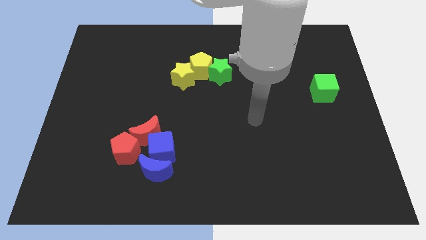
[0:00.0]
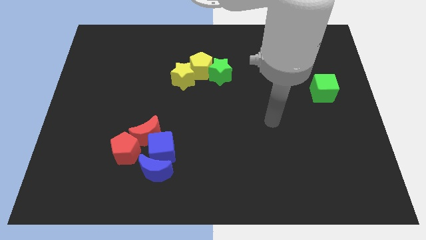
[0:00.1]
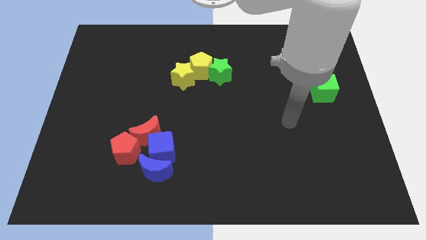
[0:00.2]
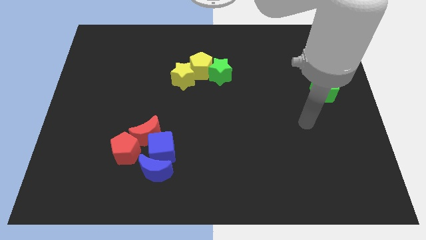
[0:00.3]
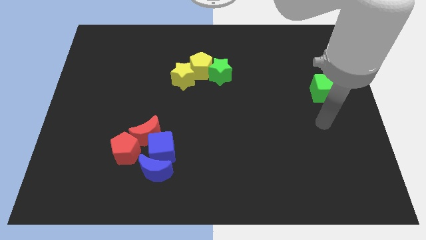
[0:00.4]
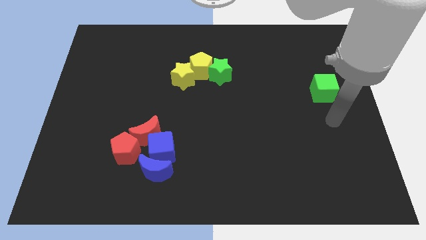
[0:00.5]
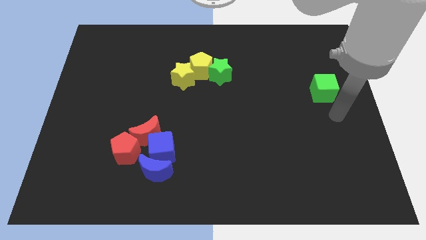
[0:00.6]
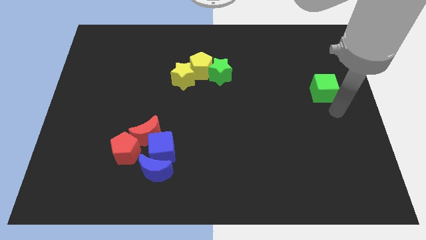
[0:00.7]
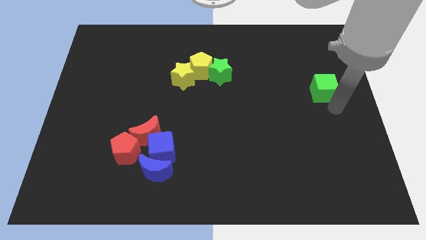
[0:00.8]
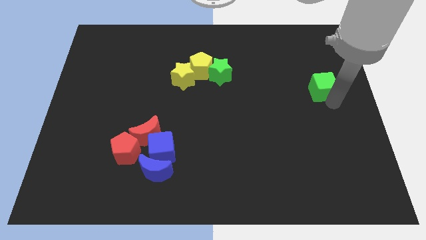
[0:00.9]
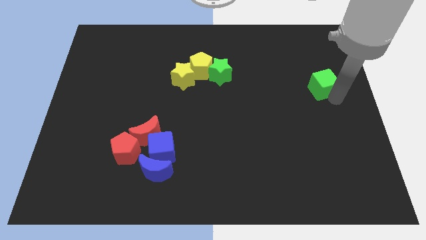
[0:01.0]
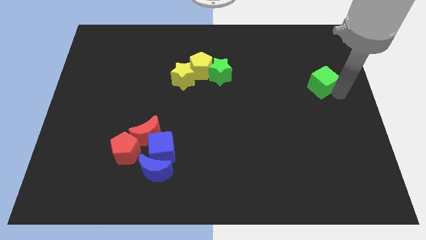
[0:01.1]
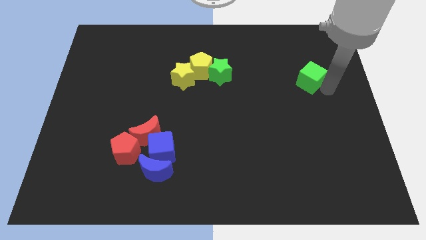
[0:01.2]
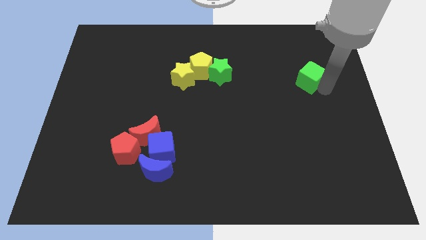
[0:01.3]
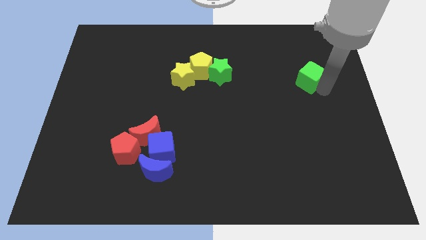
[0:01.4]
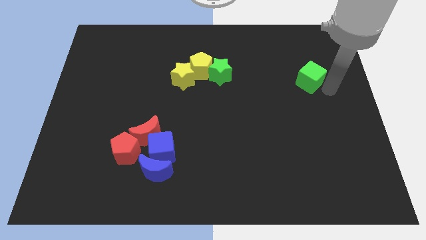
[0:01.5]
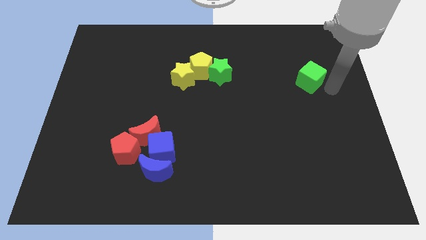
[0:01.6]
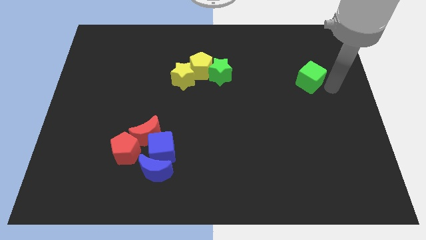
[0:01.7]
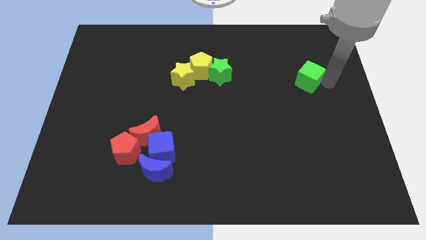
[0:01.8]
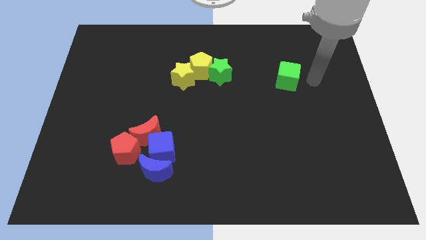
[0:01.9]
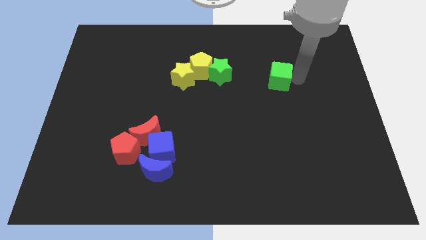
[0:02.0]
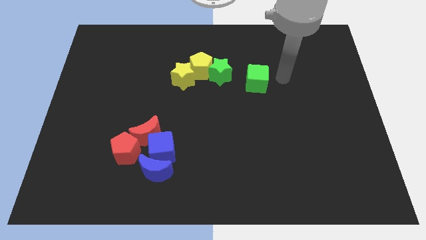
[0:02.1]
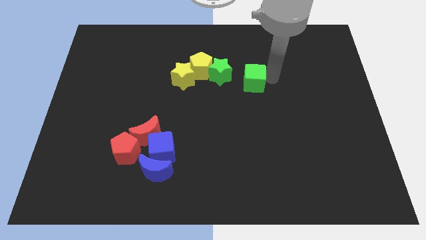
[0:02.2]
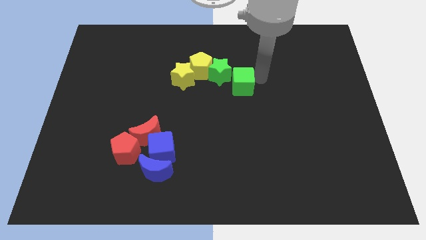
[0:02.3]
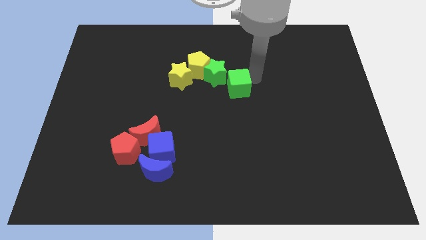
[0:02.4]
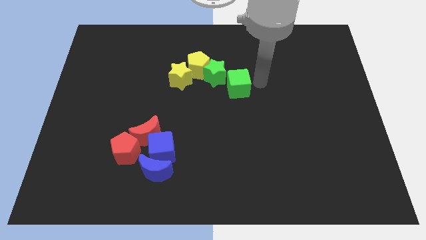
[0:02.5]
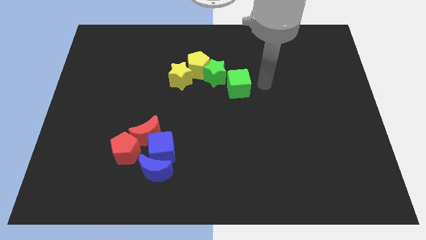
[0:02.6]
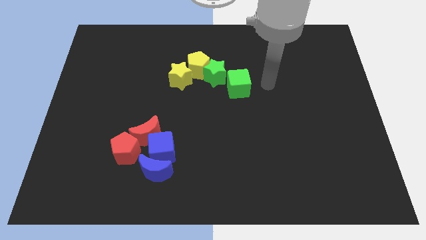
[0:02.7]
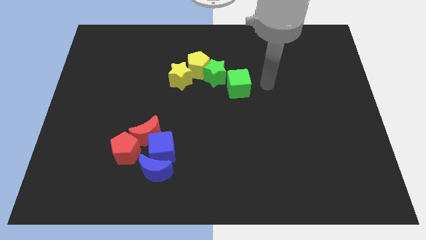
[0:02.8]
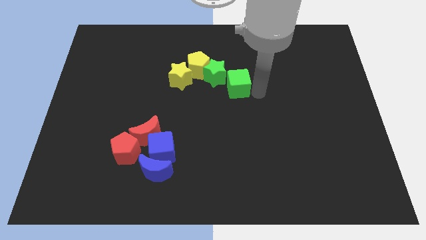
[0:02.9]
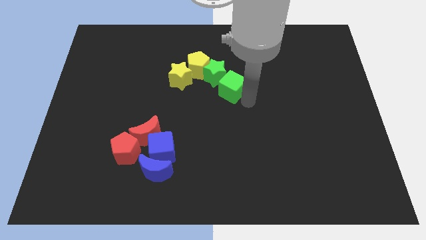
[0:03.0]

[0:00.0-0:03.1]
drag the green cube close to the green star

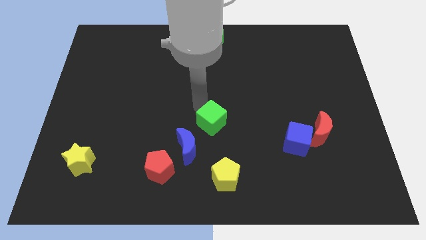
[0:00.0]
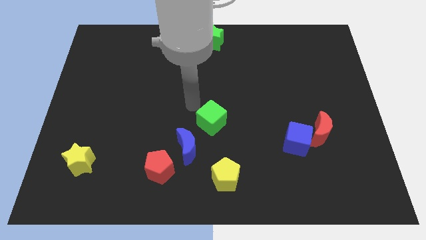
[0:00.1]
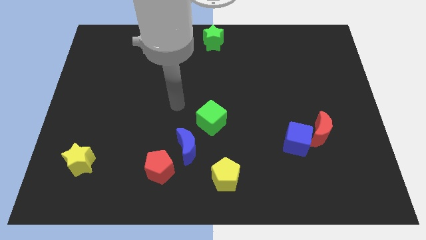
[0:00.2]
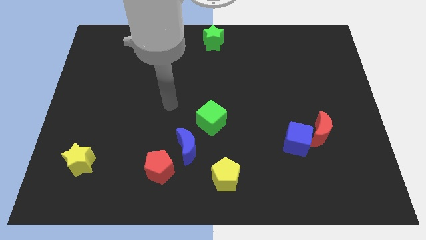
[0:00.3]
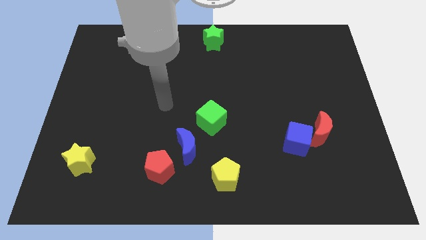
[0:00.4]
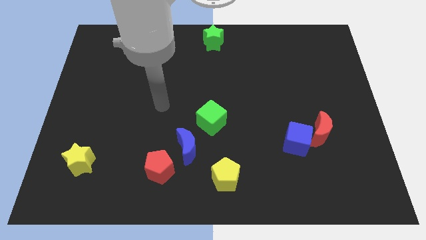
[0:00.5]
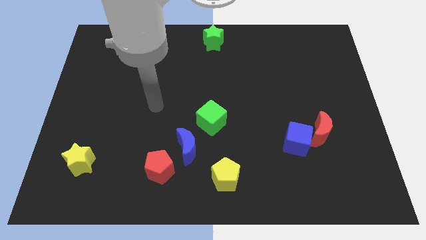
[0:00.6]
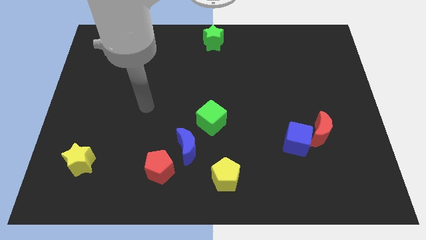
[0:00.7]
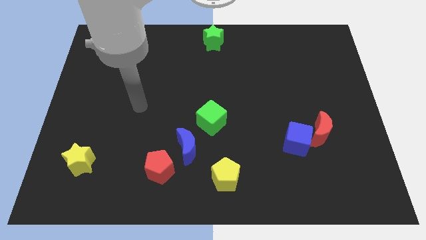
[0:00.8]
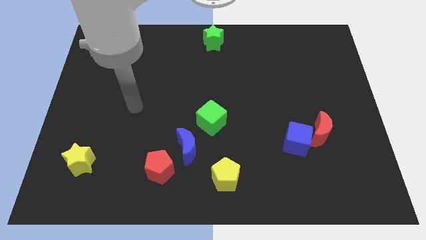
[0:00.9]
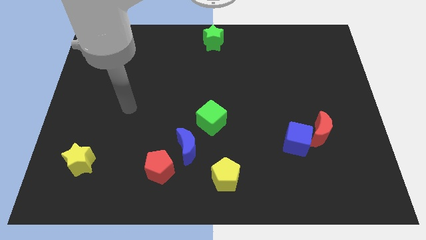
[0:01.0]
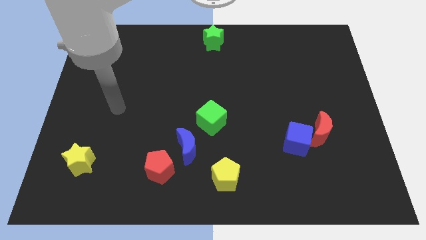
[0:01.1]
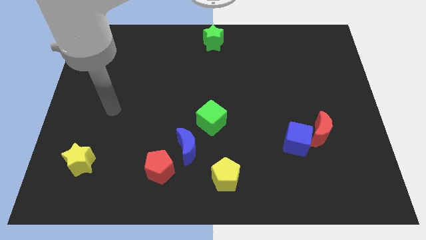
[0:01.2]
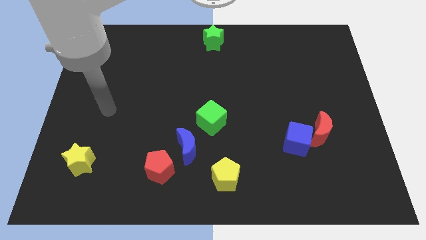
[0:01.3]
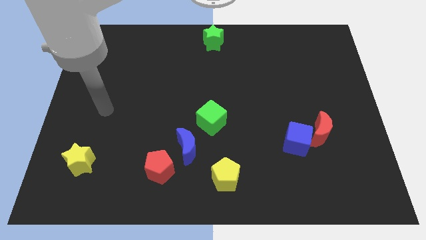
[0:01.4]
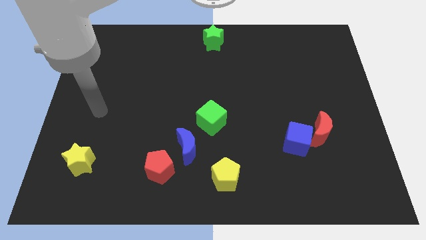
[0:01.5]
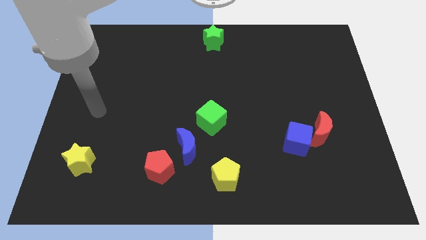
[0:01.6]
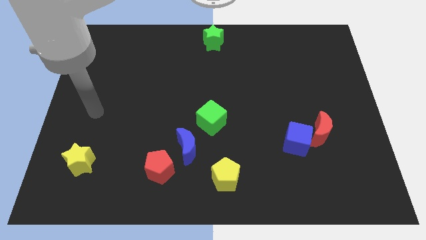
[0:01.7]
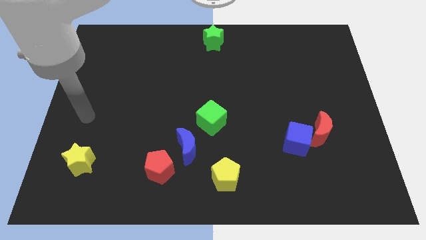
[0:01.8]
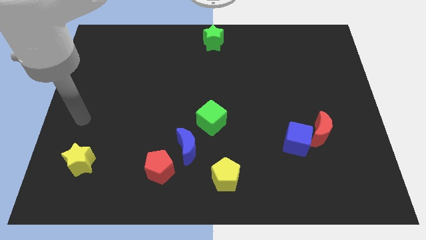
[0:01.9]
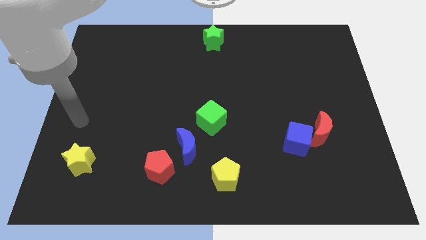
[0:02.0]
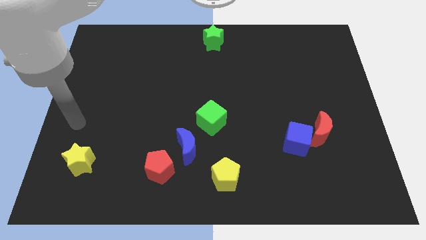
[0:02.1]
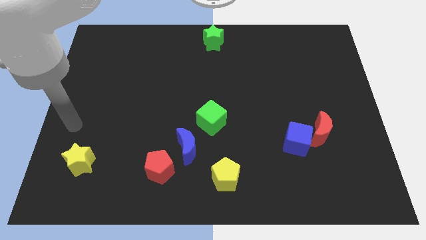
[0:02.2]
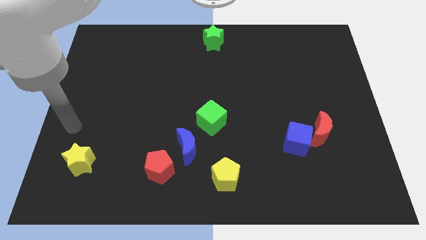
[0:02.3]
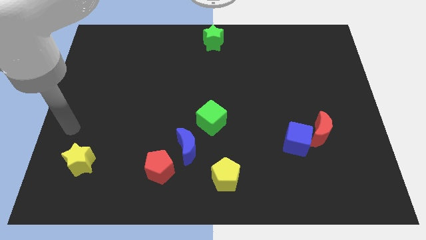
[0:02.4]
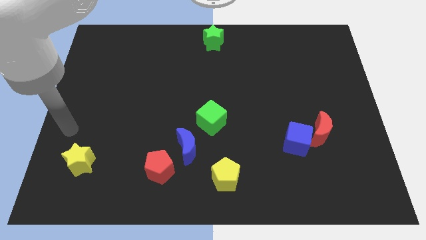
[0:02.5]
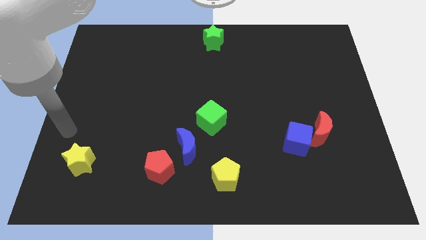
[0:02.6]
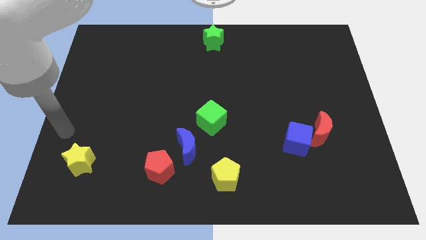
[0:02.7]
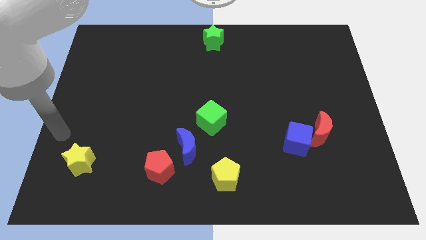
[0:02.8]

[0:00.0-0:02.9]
move your arm away from the green cube

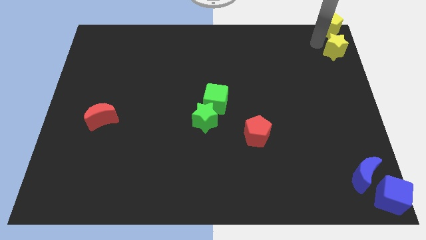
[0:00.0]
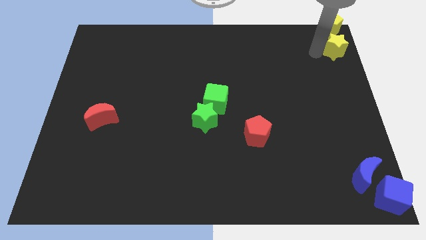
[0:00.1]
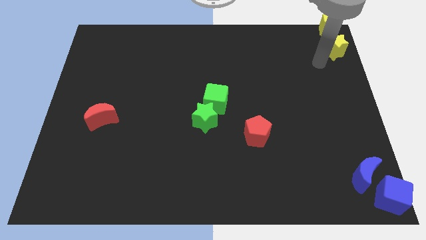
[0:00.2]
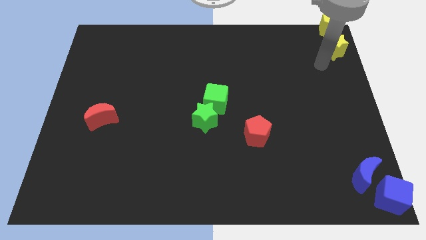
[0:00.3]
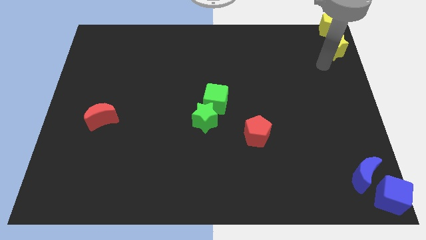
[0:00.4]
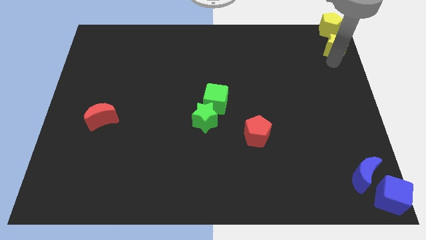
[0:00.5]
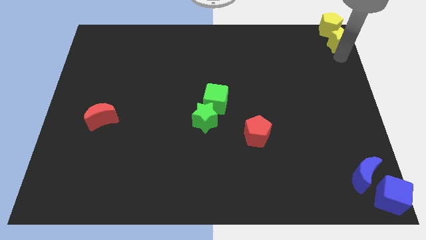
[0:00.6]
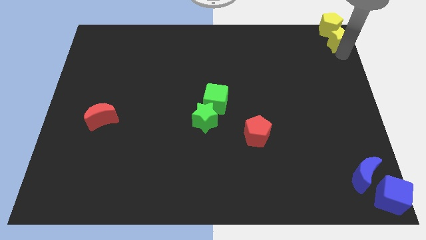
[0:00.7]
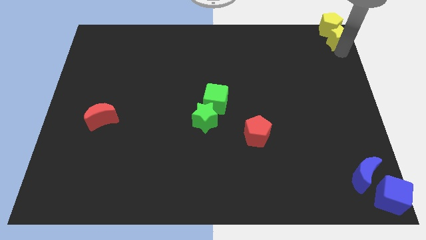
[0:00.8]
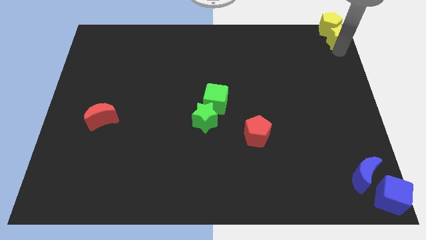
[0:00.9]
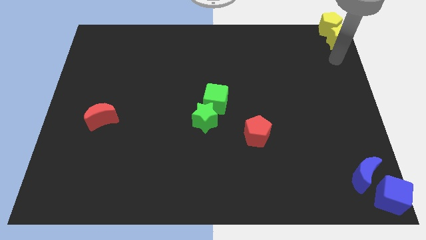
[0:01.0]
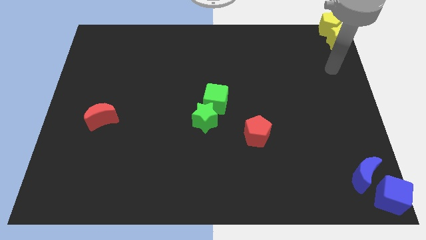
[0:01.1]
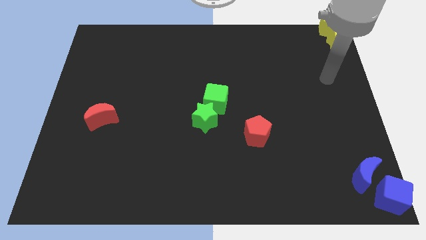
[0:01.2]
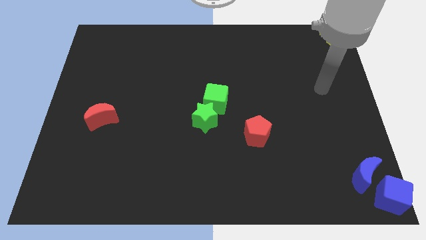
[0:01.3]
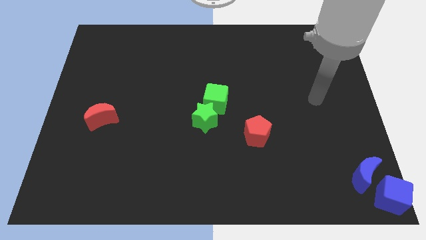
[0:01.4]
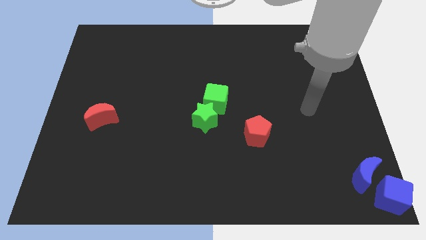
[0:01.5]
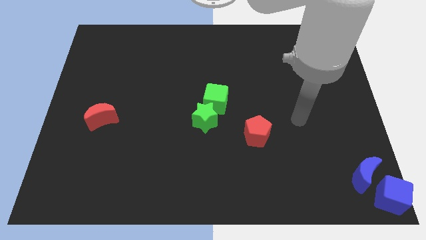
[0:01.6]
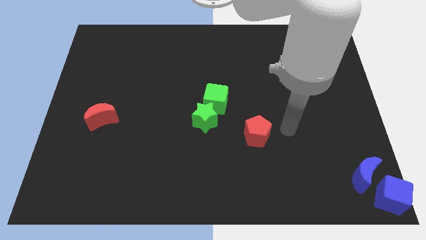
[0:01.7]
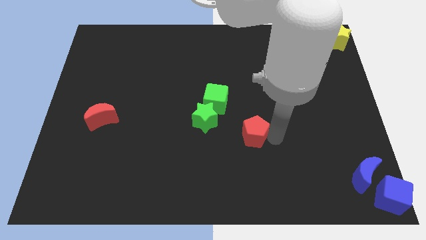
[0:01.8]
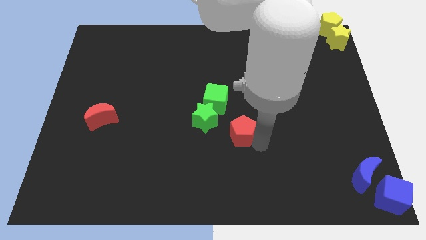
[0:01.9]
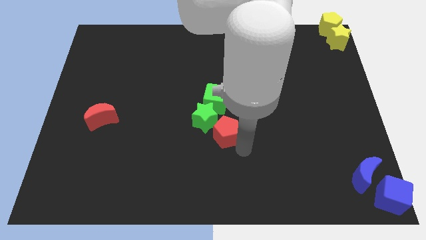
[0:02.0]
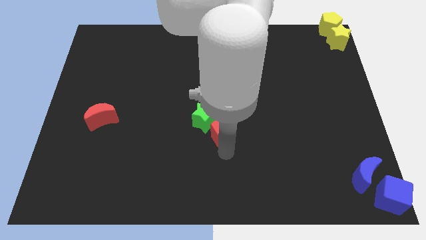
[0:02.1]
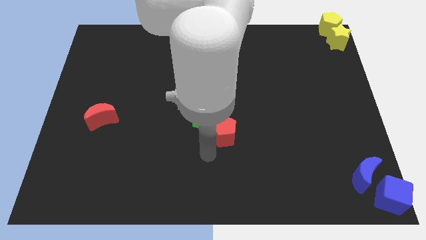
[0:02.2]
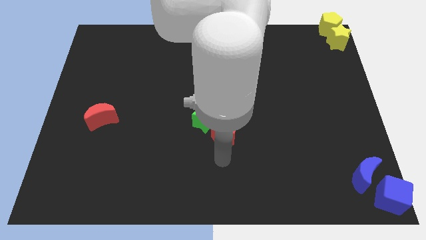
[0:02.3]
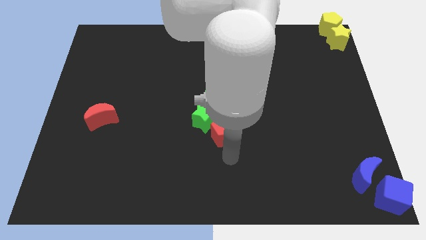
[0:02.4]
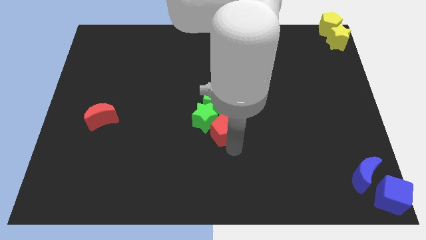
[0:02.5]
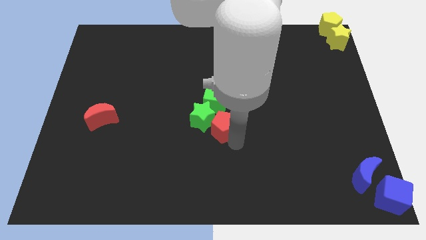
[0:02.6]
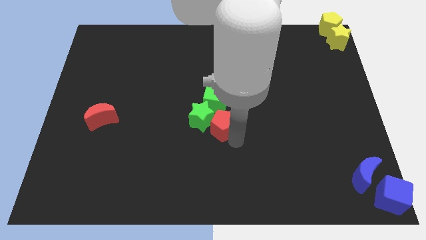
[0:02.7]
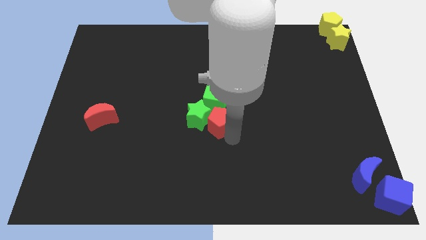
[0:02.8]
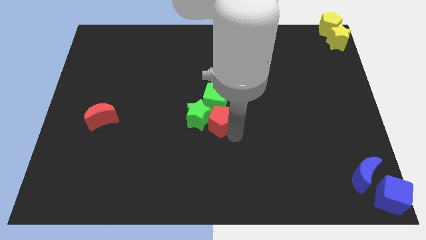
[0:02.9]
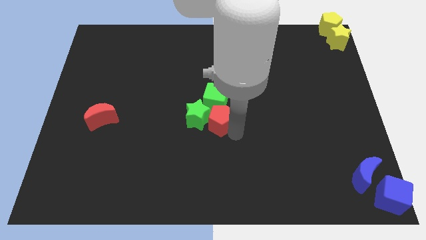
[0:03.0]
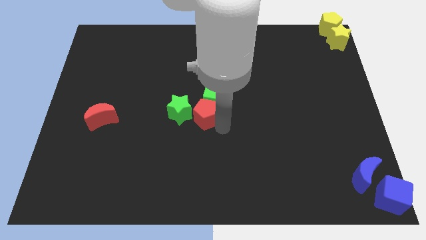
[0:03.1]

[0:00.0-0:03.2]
push red pentagon below green cube
